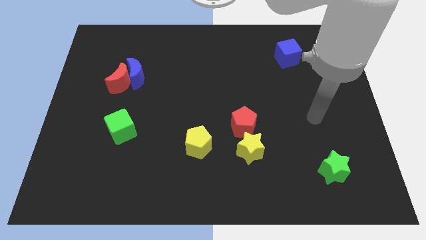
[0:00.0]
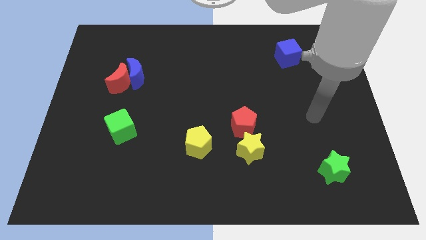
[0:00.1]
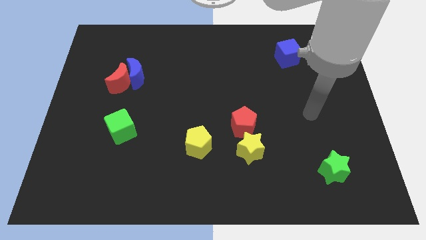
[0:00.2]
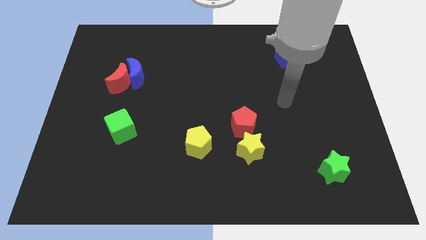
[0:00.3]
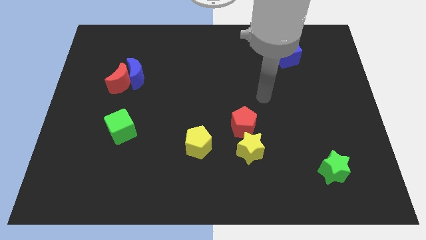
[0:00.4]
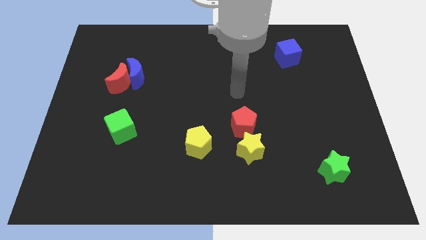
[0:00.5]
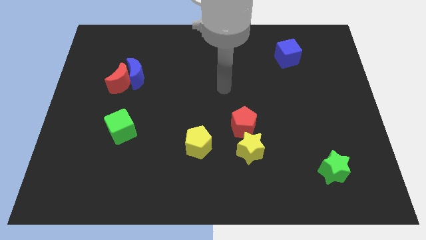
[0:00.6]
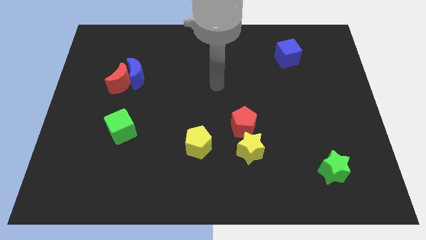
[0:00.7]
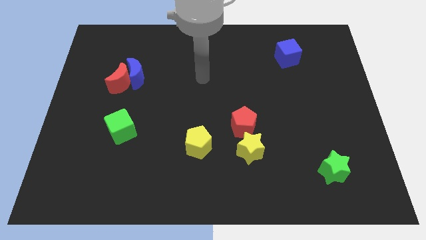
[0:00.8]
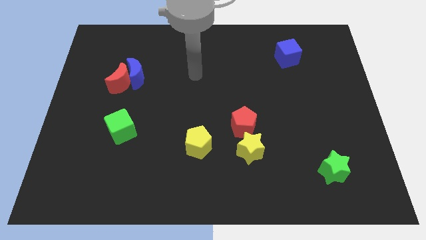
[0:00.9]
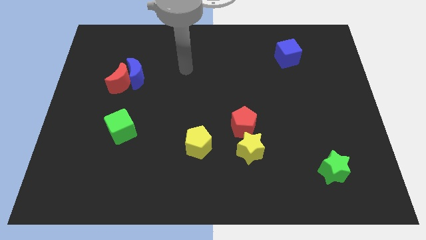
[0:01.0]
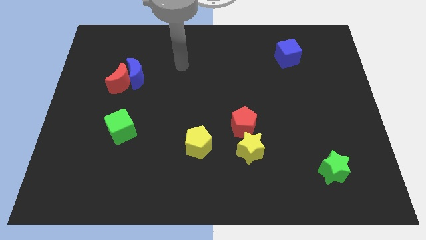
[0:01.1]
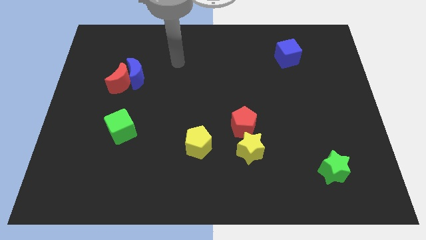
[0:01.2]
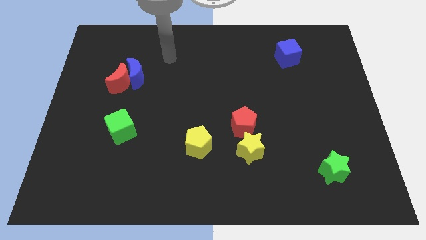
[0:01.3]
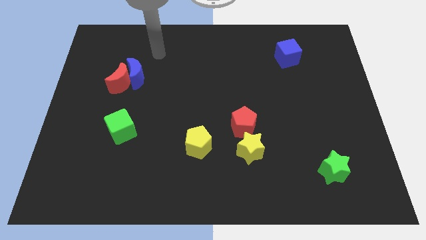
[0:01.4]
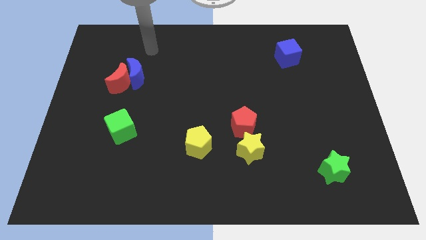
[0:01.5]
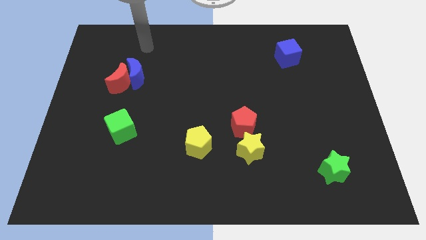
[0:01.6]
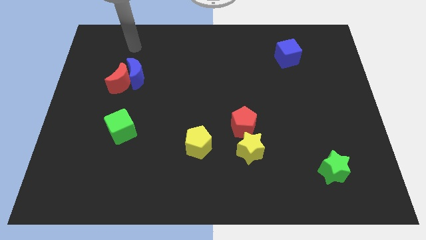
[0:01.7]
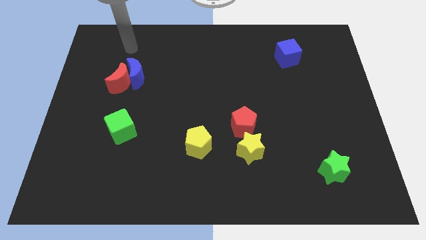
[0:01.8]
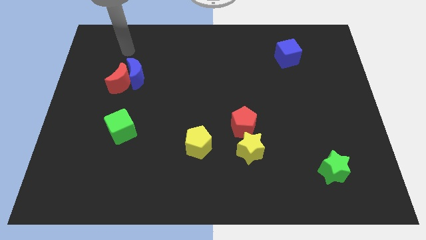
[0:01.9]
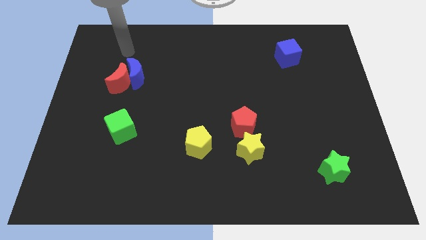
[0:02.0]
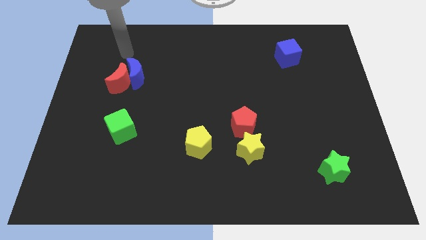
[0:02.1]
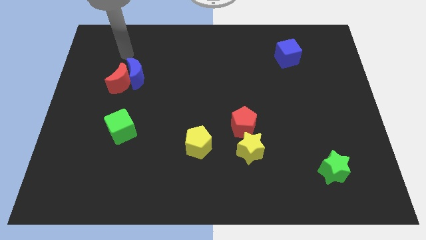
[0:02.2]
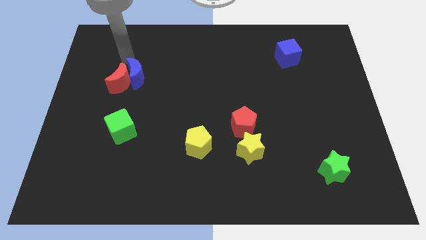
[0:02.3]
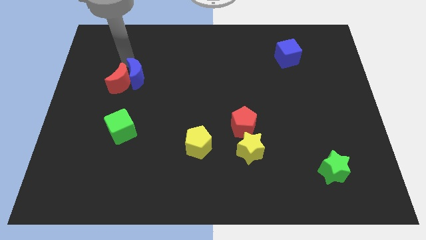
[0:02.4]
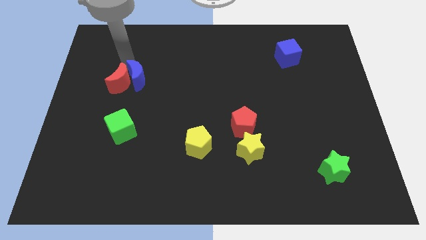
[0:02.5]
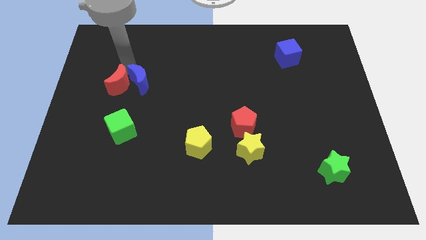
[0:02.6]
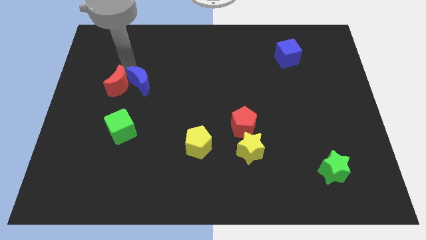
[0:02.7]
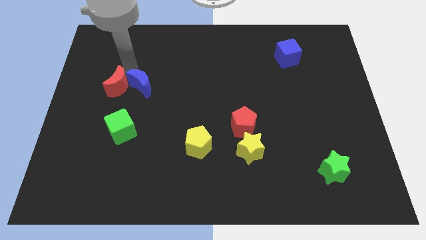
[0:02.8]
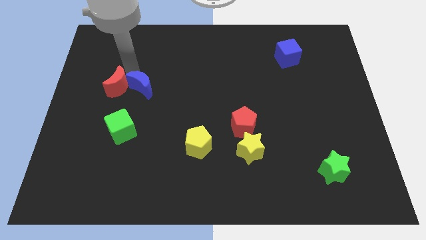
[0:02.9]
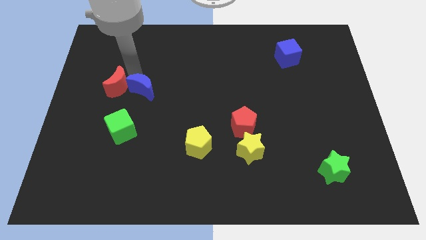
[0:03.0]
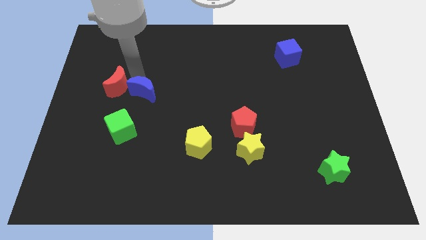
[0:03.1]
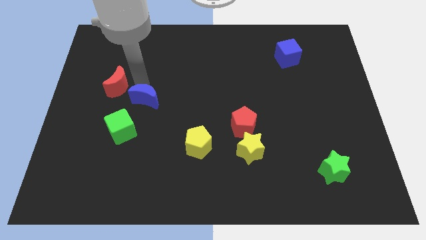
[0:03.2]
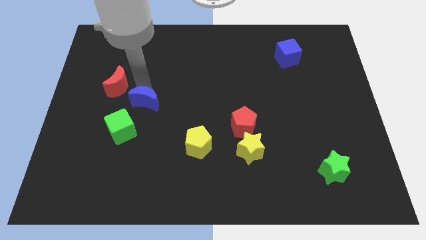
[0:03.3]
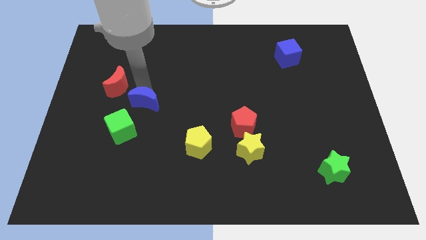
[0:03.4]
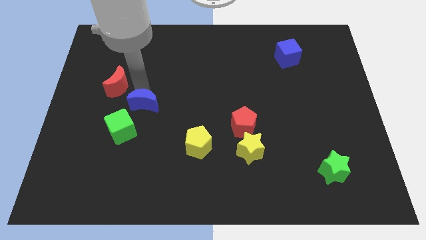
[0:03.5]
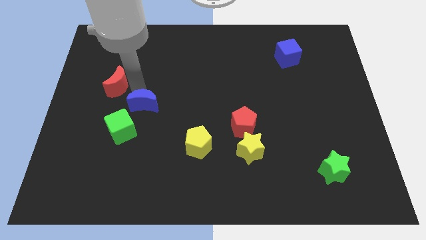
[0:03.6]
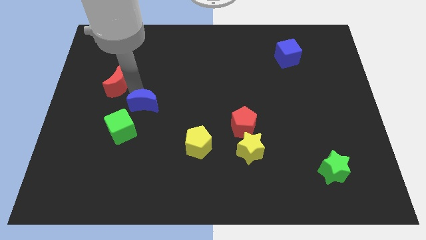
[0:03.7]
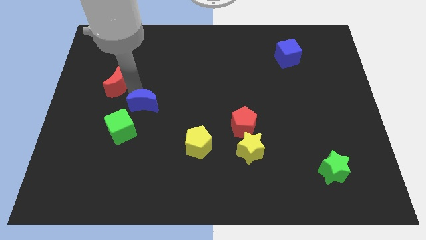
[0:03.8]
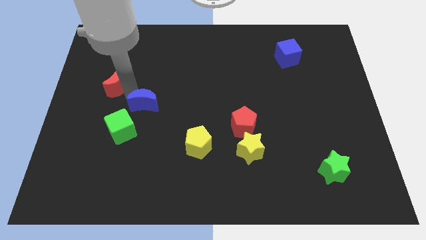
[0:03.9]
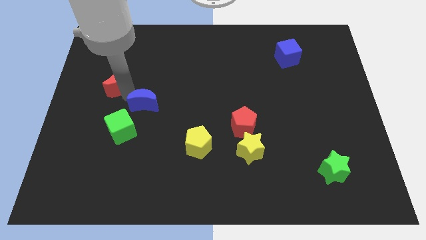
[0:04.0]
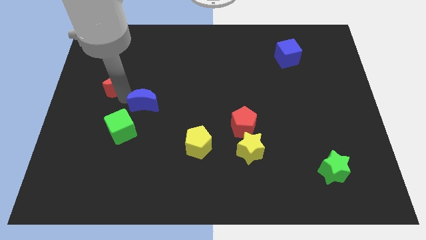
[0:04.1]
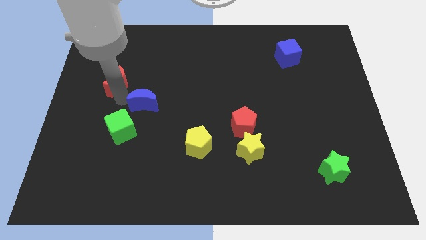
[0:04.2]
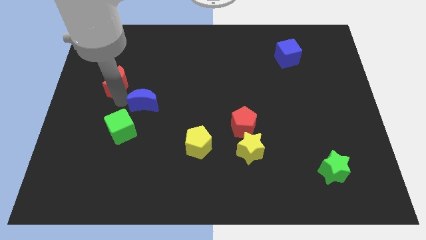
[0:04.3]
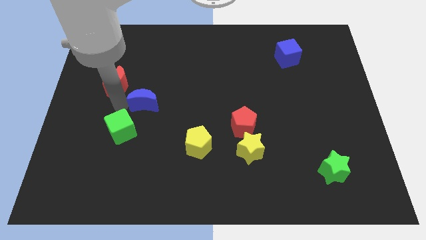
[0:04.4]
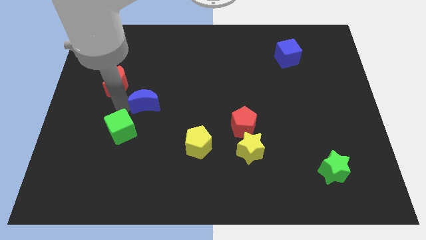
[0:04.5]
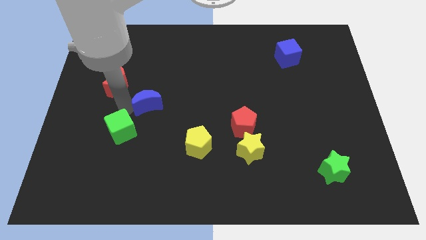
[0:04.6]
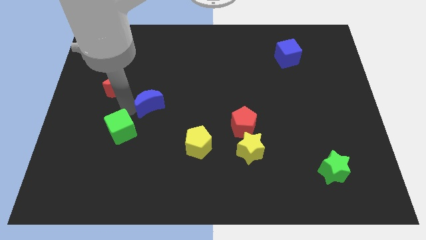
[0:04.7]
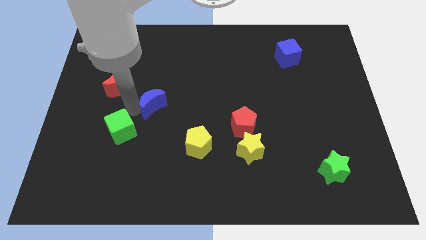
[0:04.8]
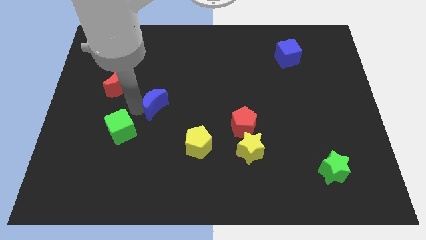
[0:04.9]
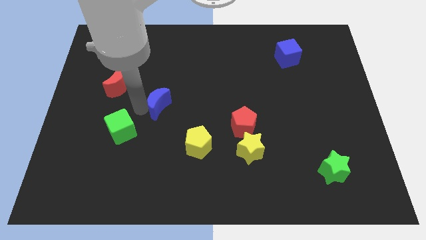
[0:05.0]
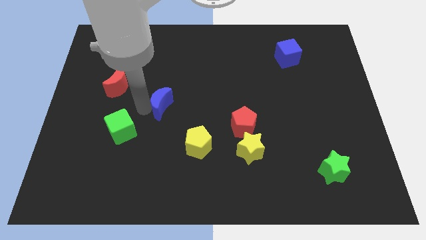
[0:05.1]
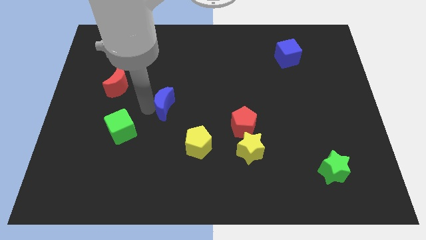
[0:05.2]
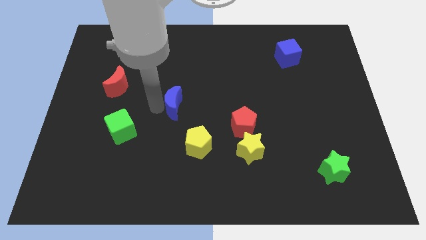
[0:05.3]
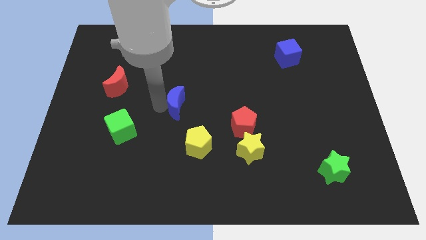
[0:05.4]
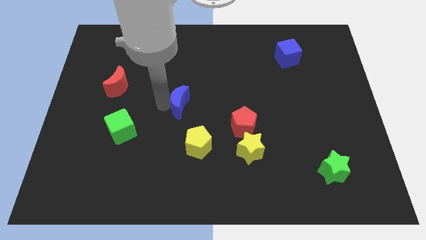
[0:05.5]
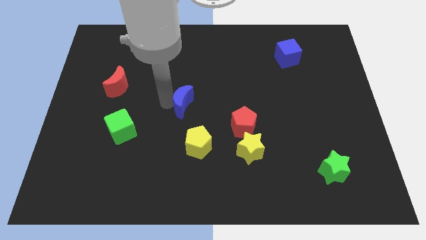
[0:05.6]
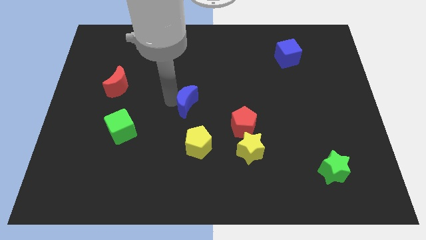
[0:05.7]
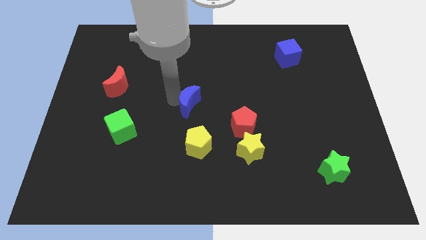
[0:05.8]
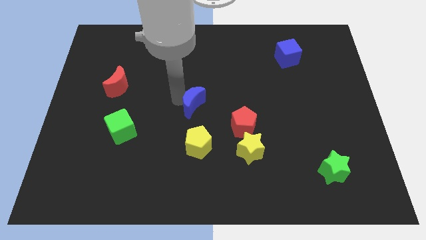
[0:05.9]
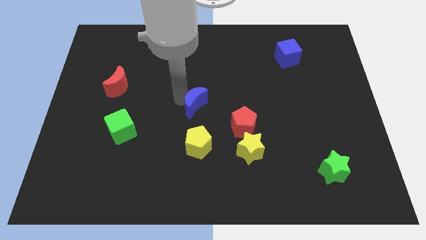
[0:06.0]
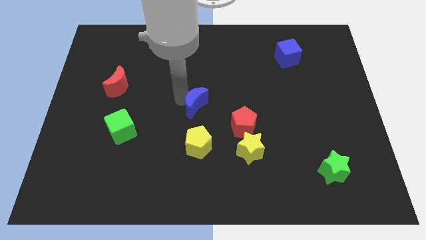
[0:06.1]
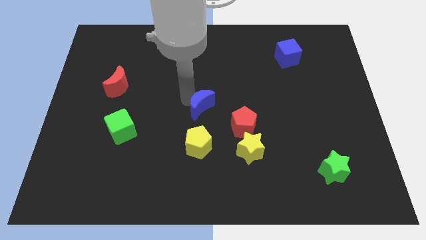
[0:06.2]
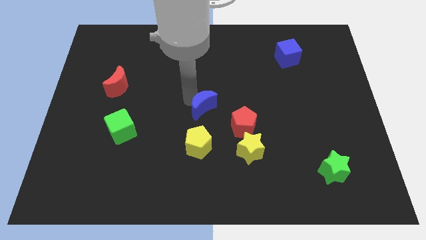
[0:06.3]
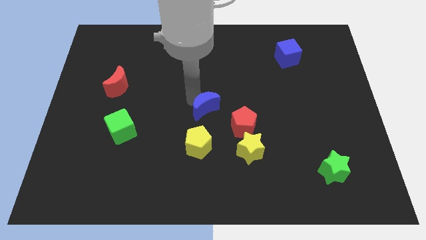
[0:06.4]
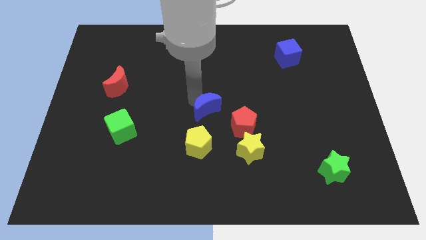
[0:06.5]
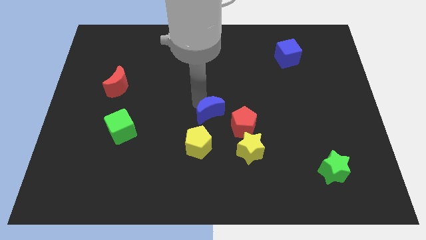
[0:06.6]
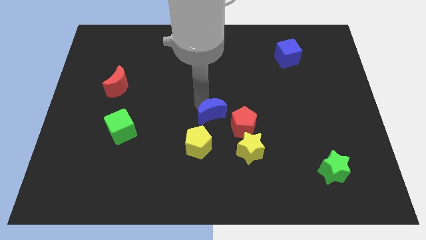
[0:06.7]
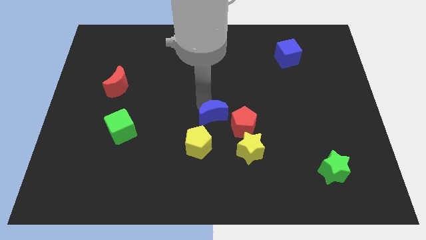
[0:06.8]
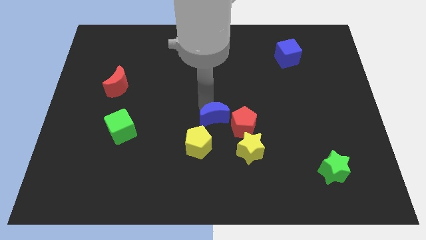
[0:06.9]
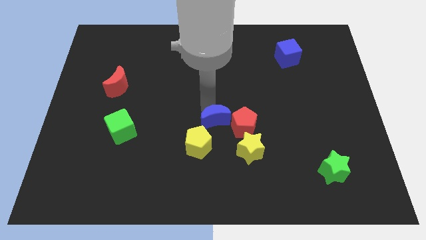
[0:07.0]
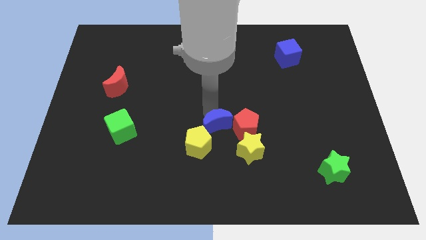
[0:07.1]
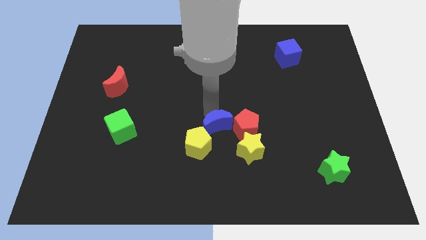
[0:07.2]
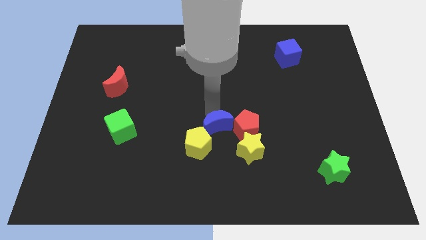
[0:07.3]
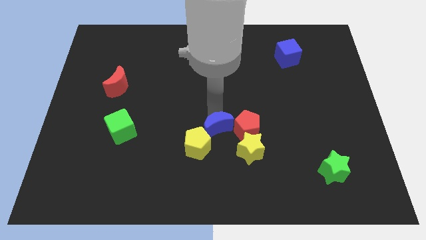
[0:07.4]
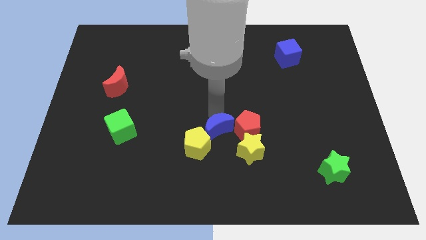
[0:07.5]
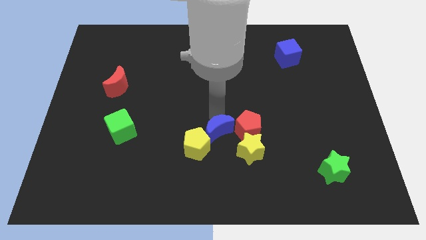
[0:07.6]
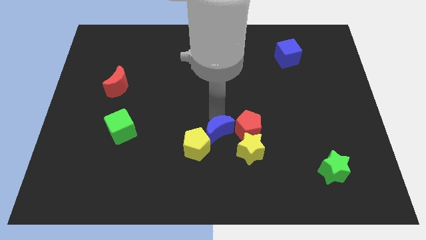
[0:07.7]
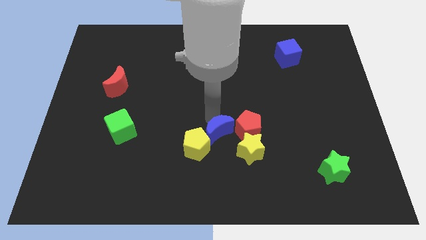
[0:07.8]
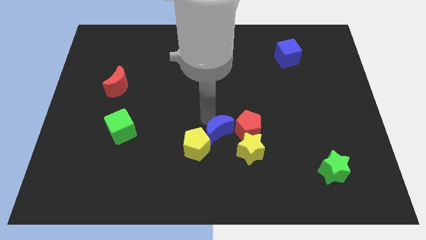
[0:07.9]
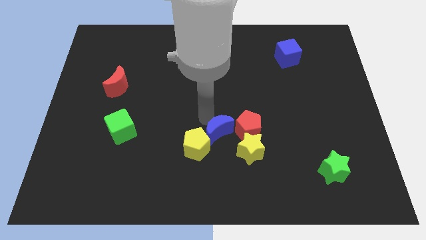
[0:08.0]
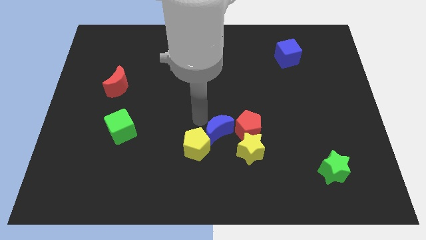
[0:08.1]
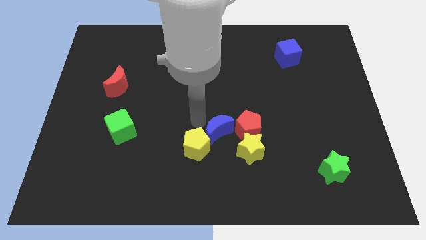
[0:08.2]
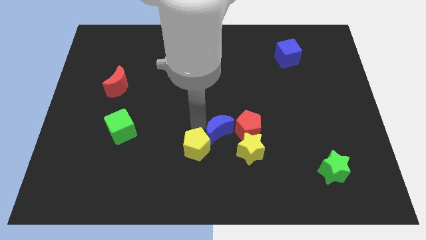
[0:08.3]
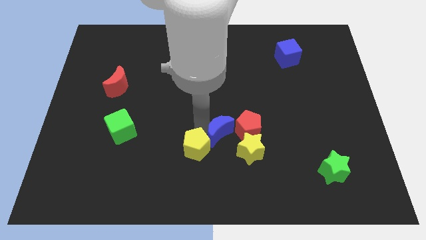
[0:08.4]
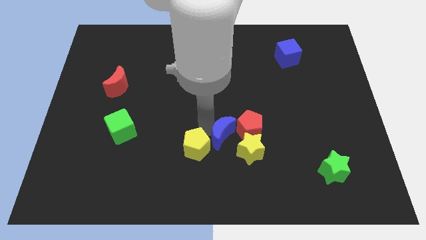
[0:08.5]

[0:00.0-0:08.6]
put the blue moon close to the red pentagon
